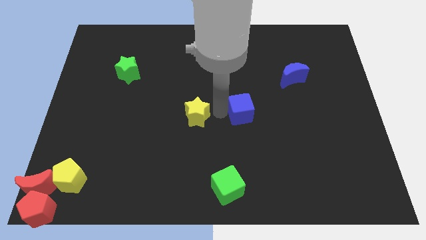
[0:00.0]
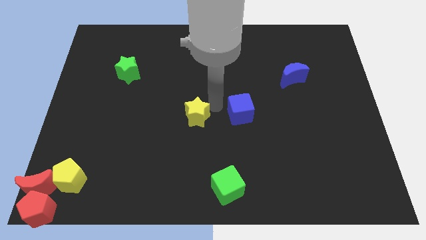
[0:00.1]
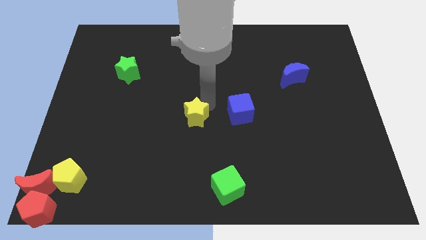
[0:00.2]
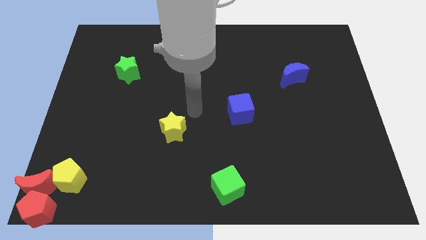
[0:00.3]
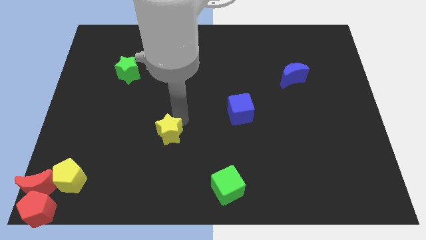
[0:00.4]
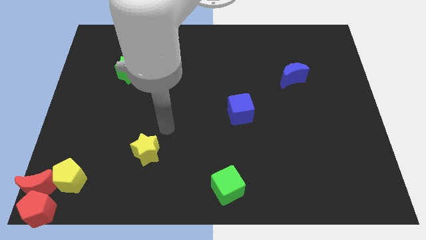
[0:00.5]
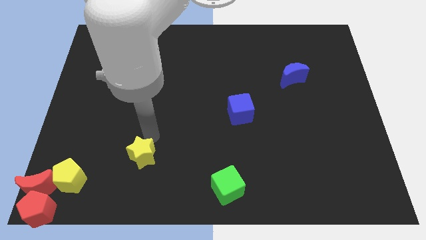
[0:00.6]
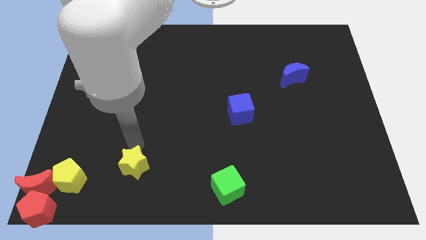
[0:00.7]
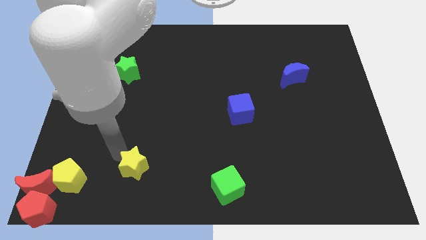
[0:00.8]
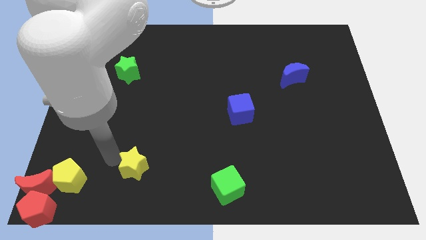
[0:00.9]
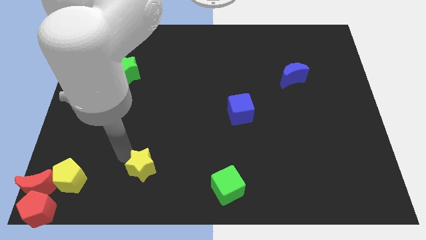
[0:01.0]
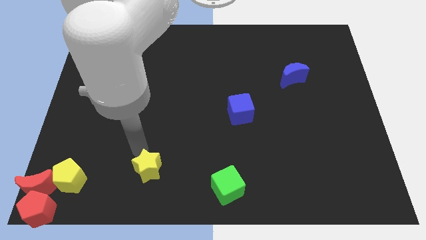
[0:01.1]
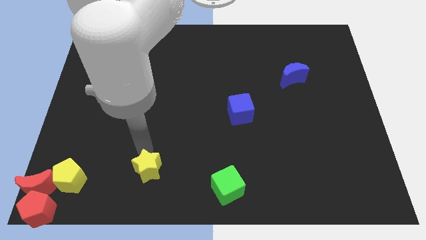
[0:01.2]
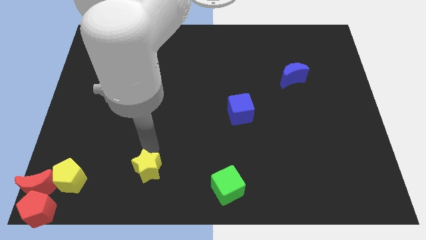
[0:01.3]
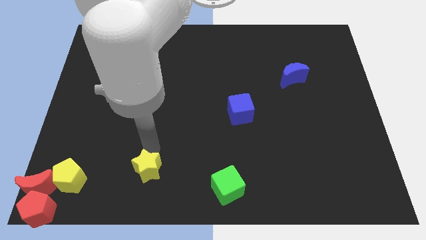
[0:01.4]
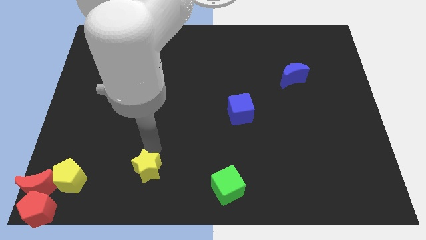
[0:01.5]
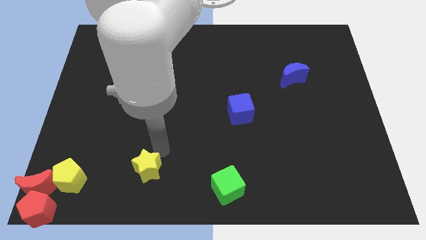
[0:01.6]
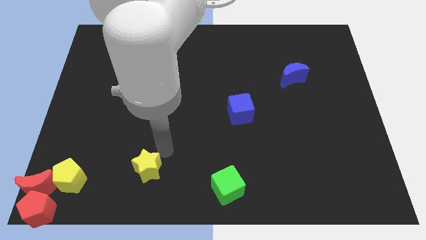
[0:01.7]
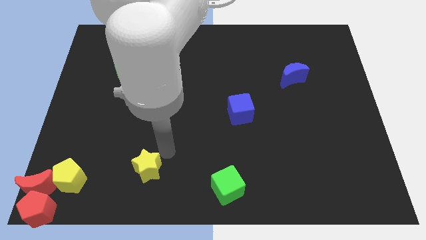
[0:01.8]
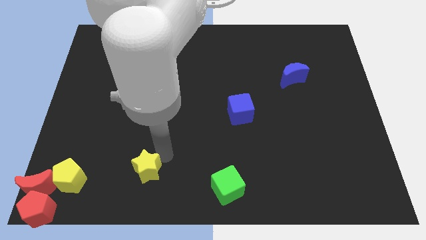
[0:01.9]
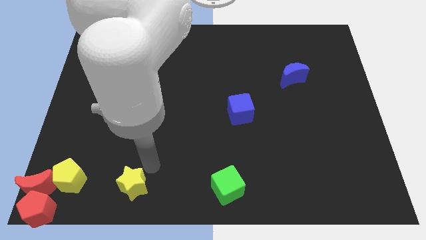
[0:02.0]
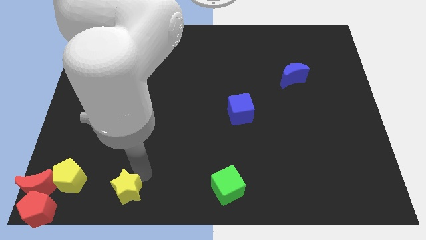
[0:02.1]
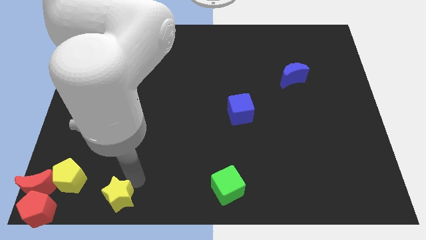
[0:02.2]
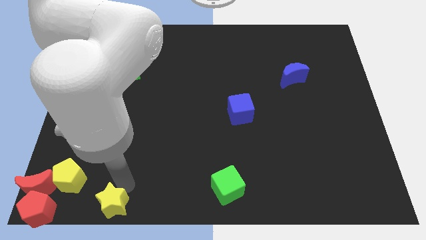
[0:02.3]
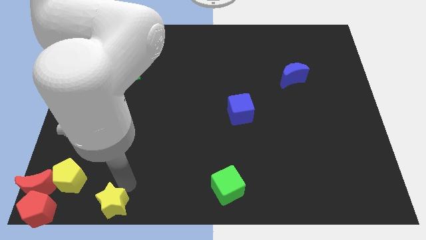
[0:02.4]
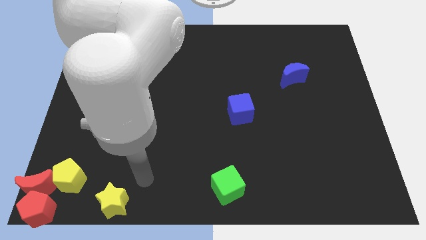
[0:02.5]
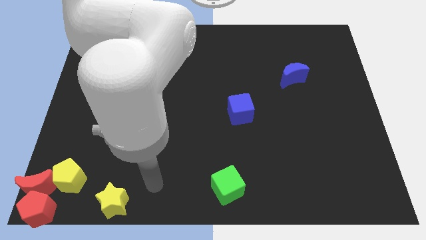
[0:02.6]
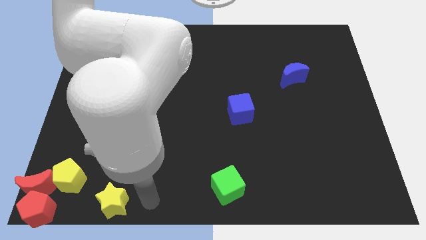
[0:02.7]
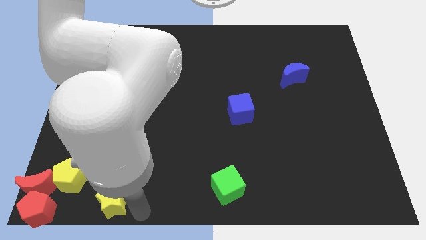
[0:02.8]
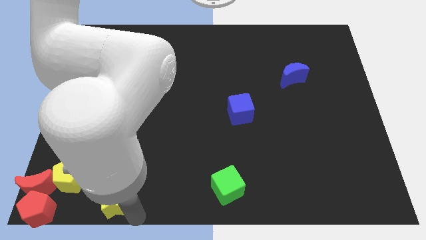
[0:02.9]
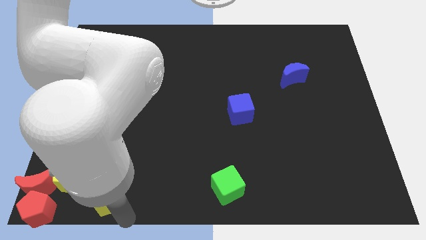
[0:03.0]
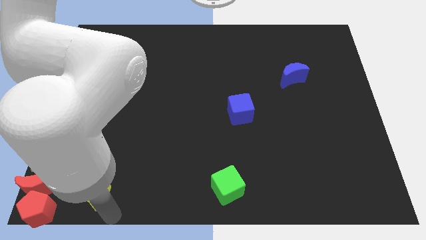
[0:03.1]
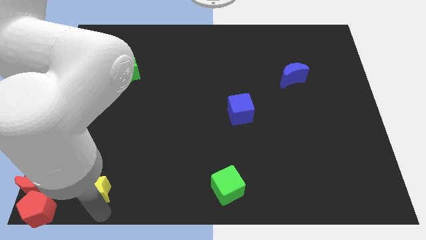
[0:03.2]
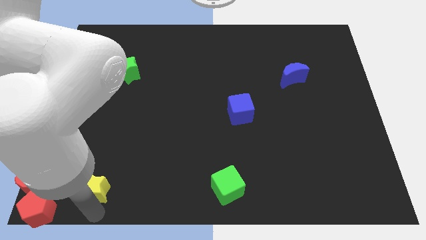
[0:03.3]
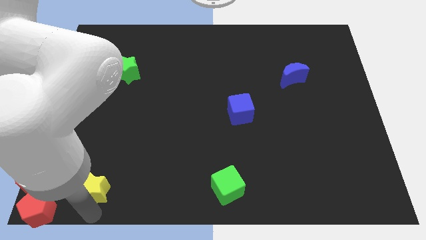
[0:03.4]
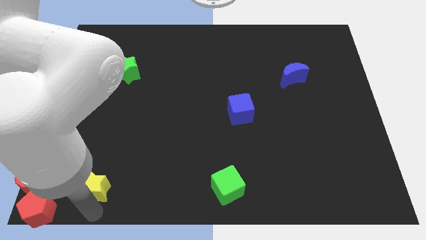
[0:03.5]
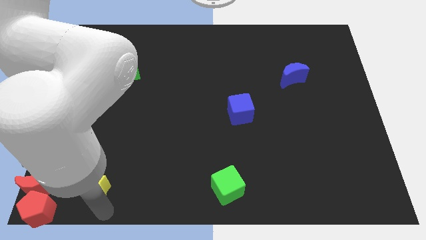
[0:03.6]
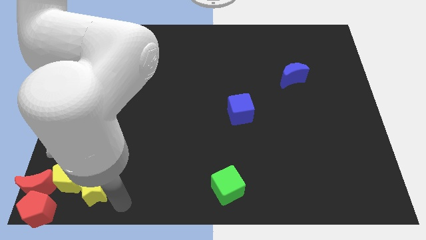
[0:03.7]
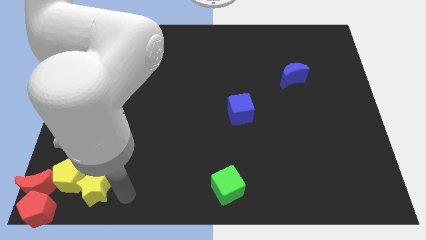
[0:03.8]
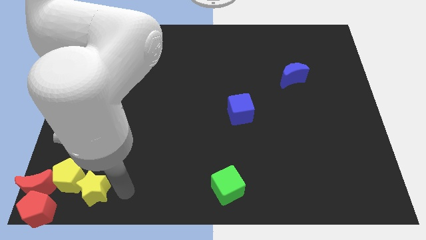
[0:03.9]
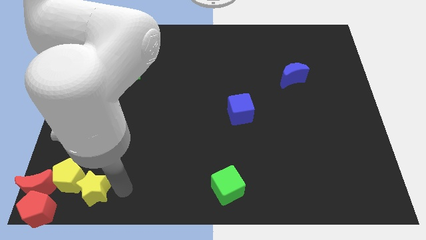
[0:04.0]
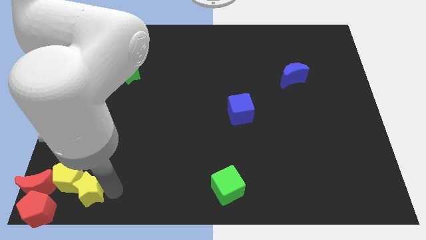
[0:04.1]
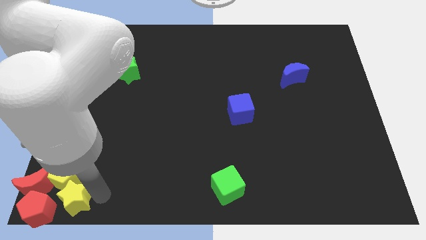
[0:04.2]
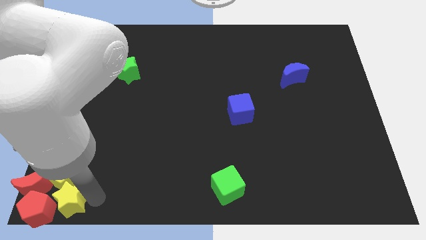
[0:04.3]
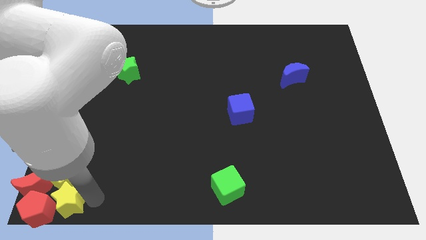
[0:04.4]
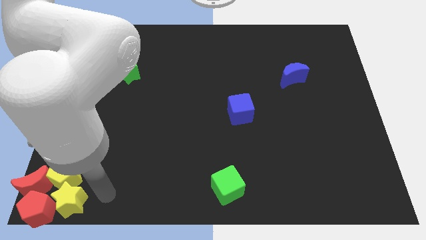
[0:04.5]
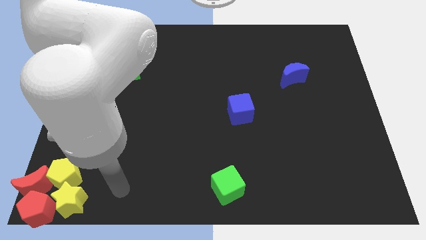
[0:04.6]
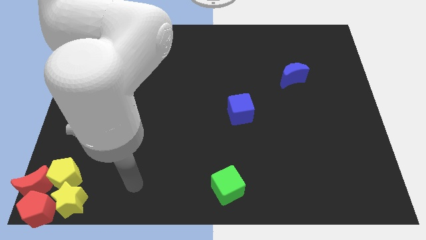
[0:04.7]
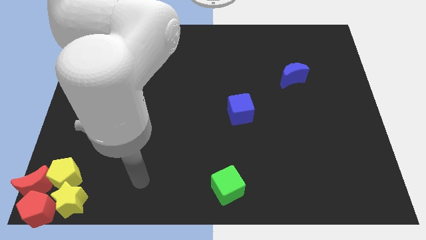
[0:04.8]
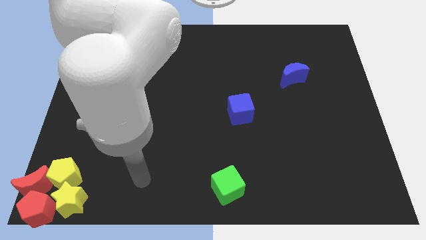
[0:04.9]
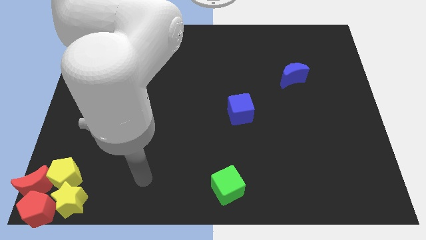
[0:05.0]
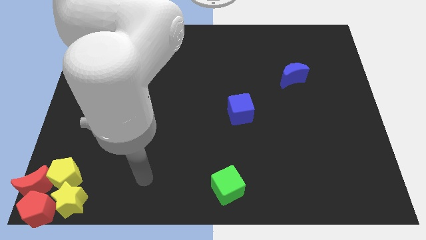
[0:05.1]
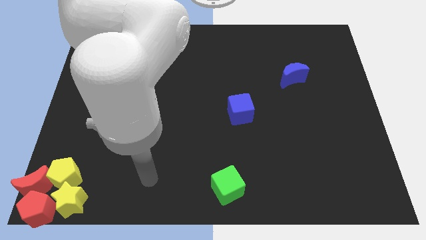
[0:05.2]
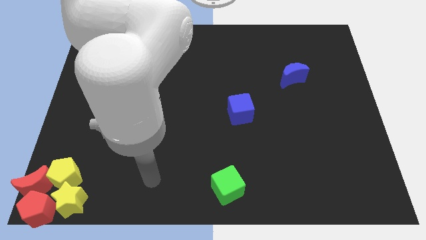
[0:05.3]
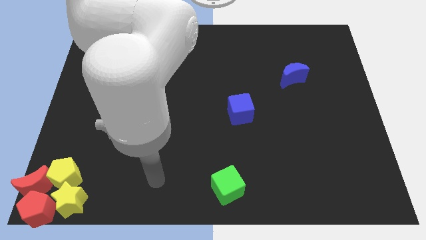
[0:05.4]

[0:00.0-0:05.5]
place yellow star below yellow pentagon beside red blocks

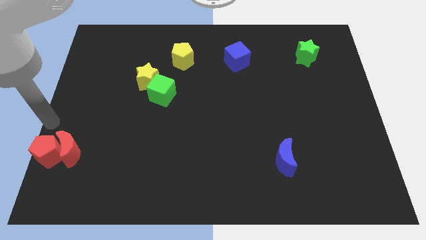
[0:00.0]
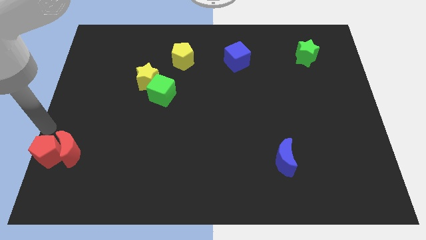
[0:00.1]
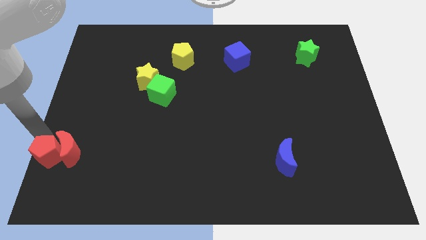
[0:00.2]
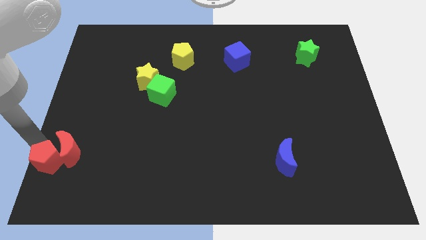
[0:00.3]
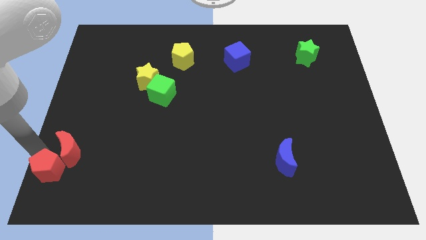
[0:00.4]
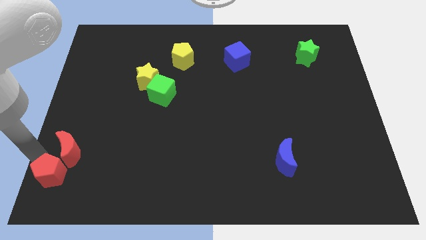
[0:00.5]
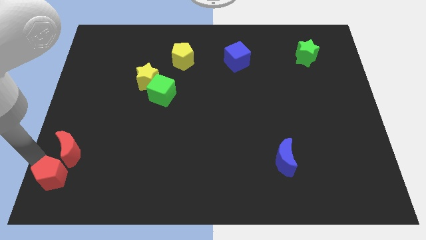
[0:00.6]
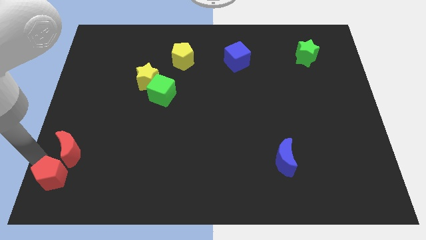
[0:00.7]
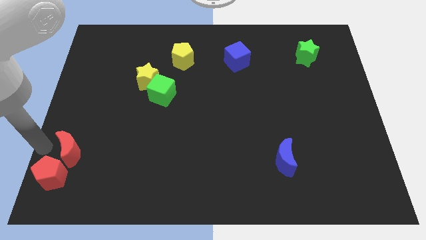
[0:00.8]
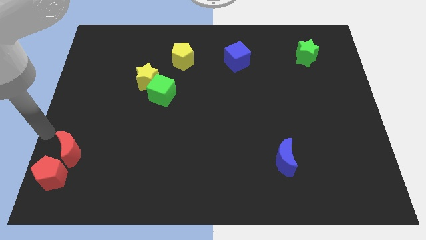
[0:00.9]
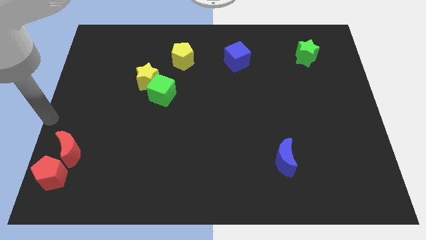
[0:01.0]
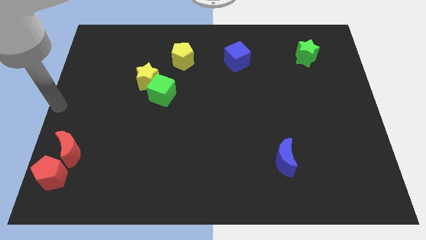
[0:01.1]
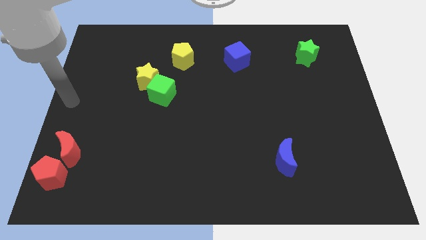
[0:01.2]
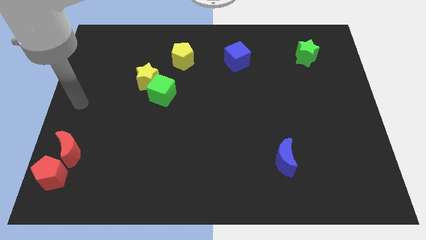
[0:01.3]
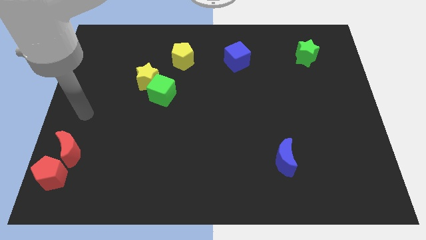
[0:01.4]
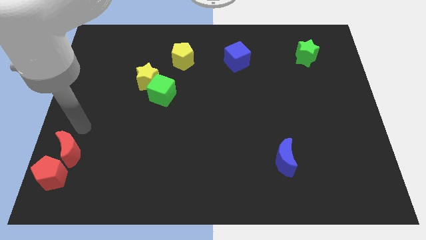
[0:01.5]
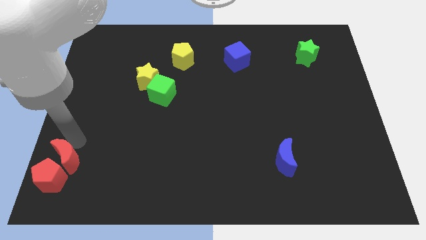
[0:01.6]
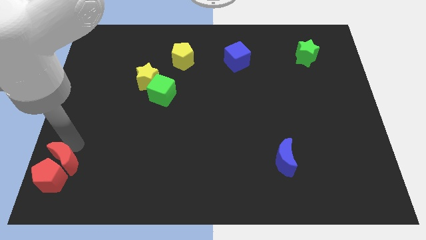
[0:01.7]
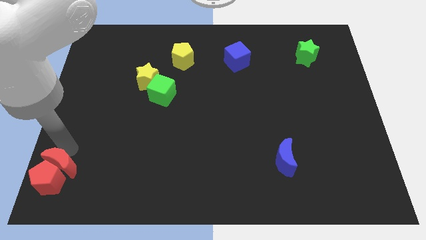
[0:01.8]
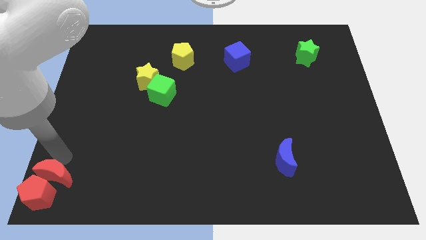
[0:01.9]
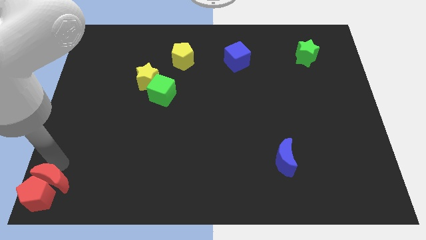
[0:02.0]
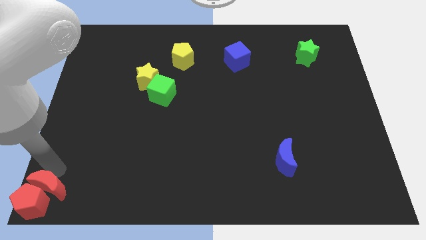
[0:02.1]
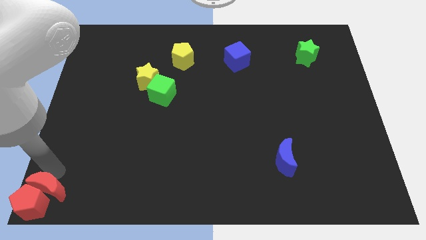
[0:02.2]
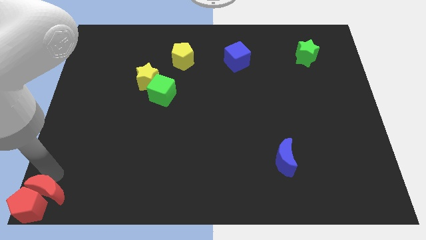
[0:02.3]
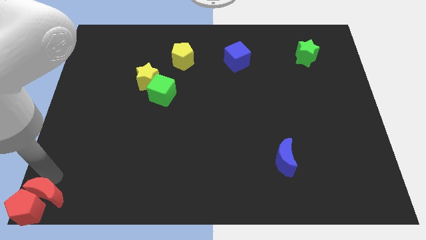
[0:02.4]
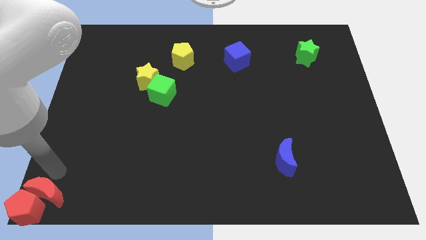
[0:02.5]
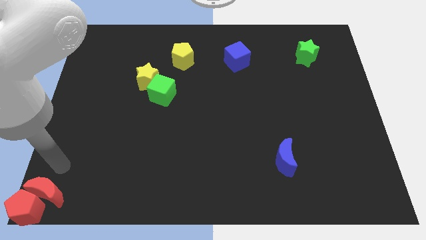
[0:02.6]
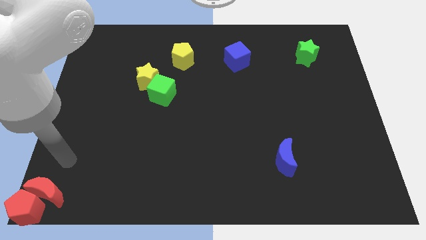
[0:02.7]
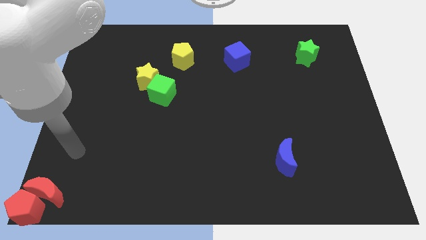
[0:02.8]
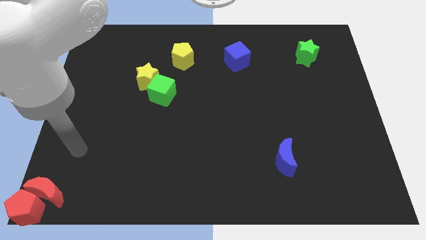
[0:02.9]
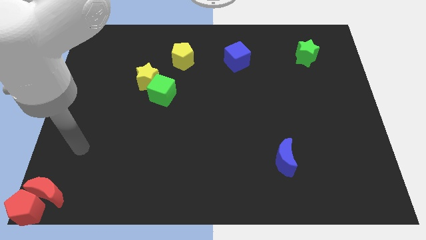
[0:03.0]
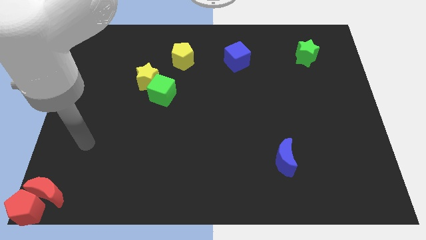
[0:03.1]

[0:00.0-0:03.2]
push the red pentagon to the bottom left corner with the red moon

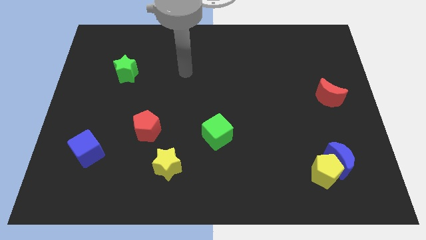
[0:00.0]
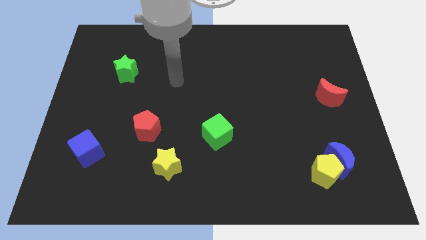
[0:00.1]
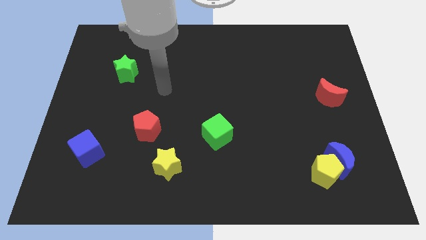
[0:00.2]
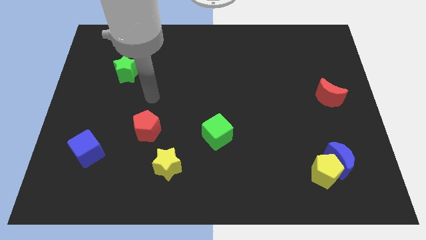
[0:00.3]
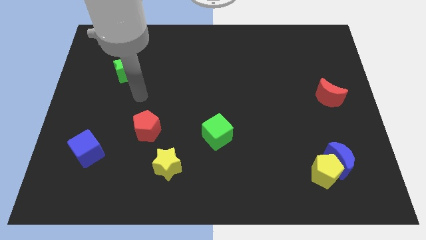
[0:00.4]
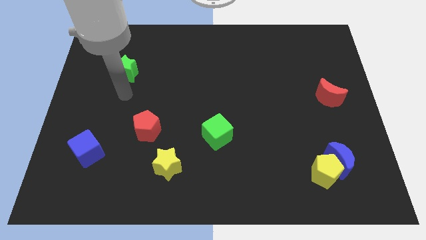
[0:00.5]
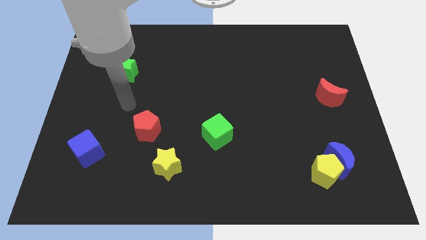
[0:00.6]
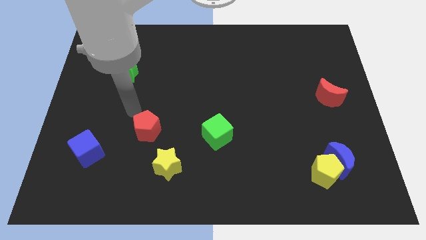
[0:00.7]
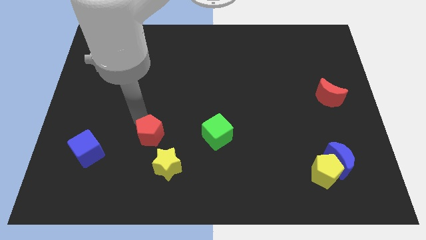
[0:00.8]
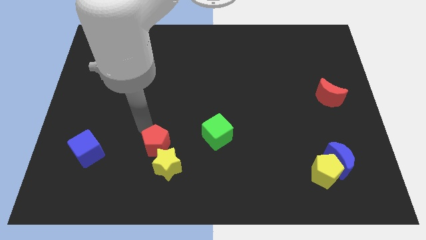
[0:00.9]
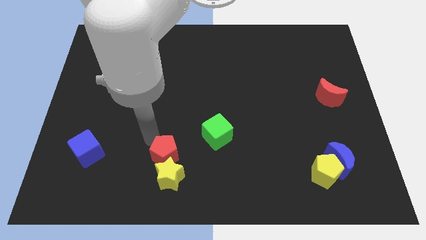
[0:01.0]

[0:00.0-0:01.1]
move the red pentagon into the top side of the yellow star
